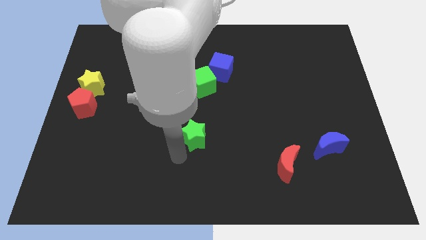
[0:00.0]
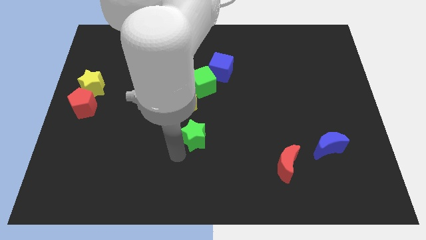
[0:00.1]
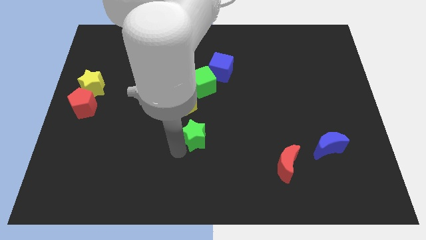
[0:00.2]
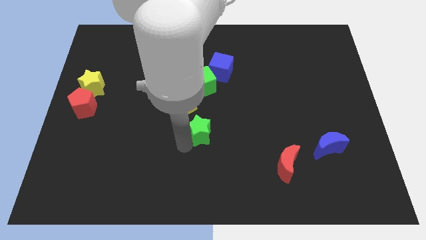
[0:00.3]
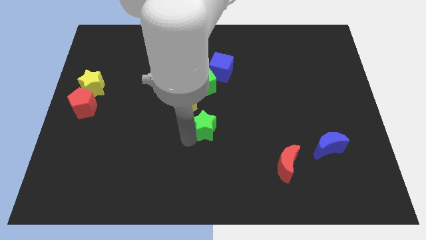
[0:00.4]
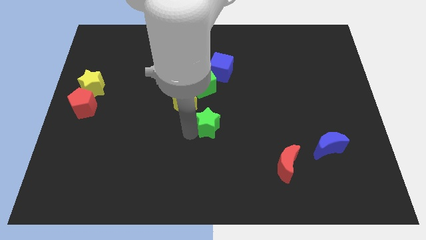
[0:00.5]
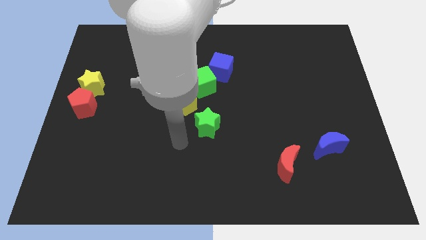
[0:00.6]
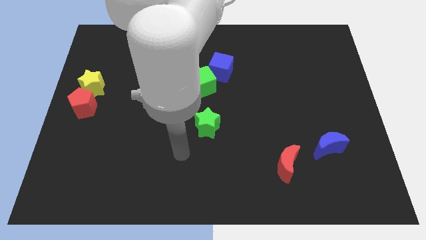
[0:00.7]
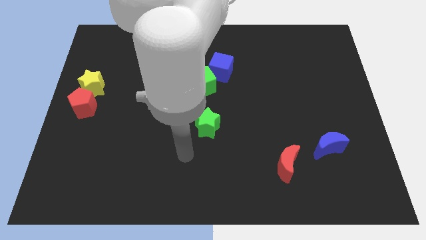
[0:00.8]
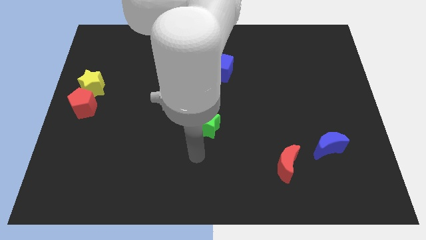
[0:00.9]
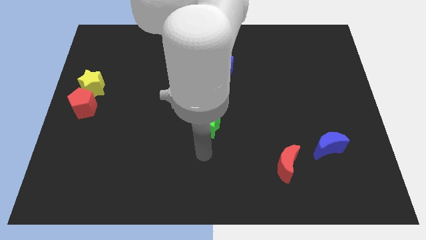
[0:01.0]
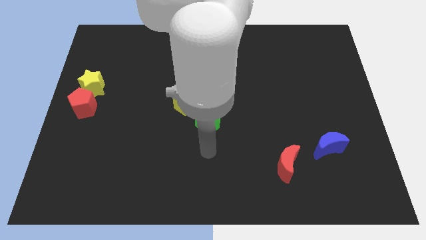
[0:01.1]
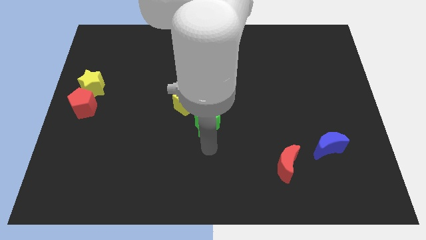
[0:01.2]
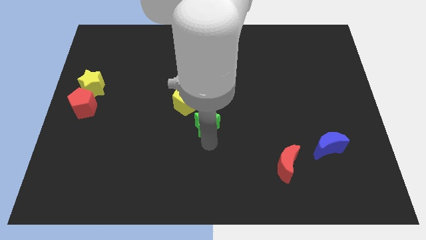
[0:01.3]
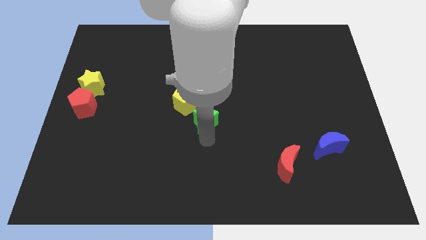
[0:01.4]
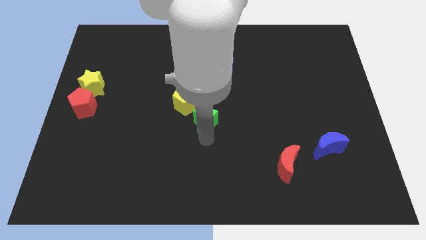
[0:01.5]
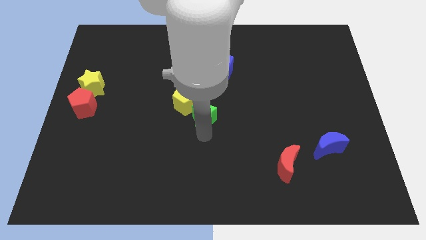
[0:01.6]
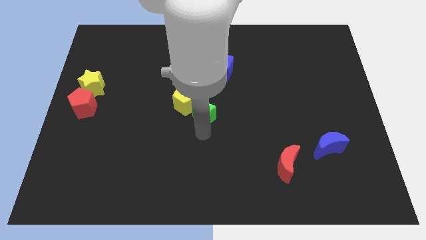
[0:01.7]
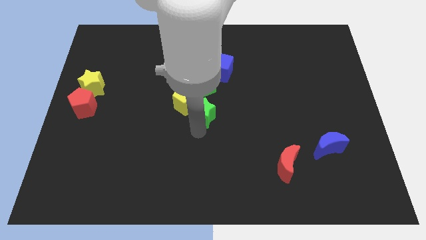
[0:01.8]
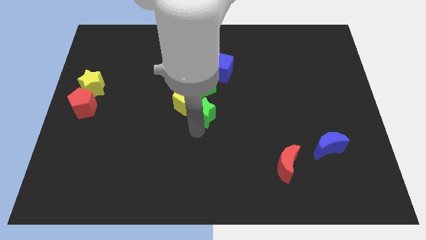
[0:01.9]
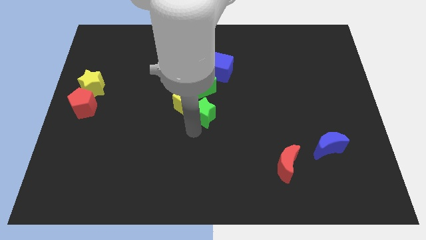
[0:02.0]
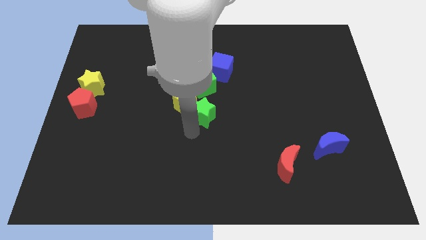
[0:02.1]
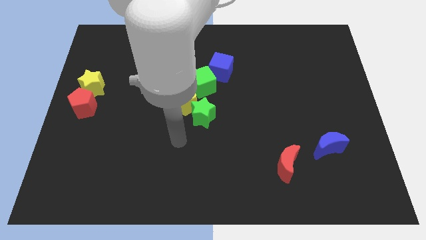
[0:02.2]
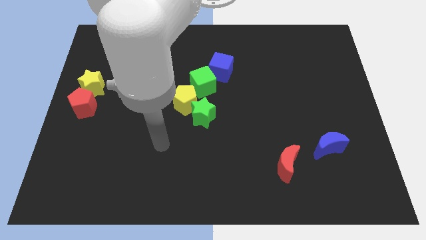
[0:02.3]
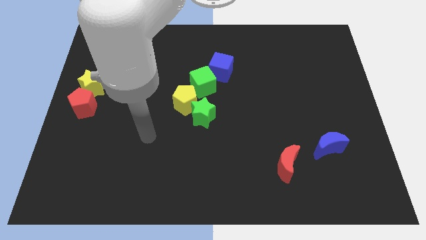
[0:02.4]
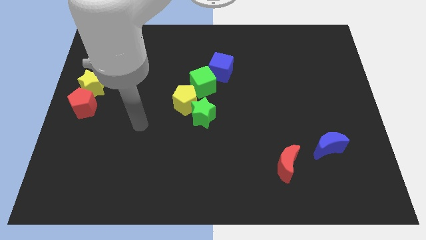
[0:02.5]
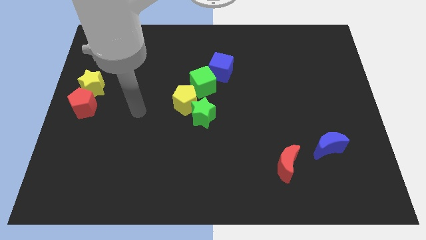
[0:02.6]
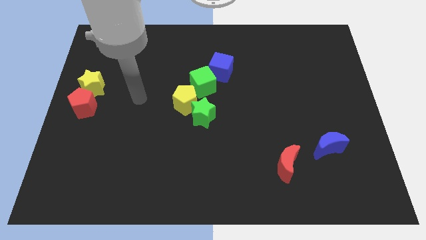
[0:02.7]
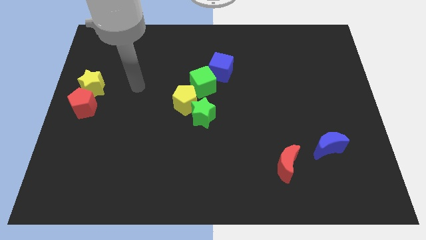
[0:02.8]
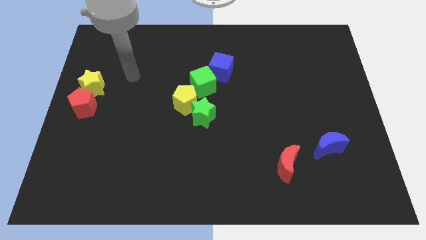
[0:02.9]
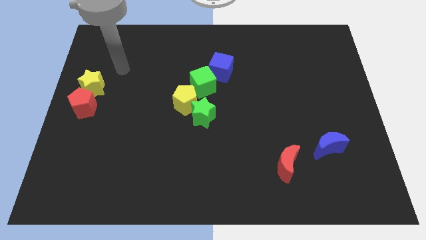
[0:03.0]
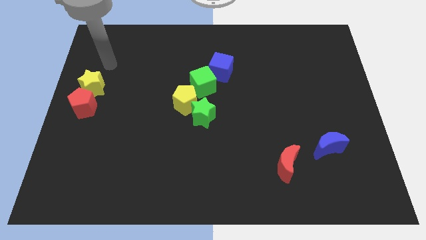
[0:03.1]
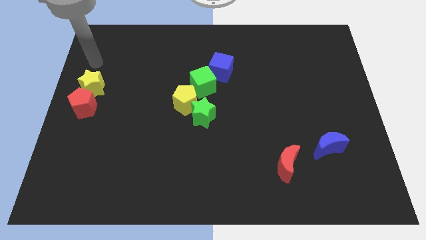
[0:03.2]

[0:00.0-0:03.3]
move green star at the bottom of yellow pentagon

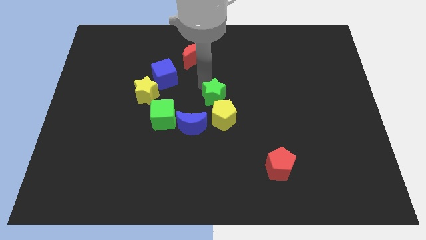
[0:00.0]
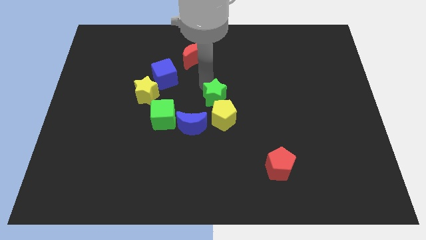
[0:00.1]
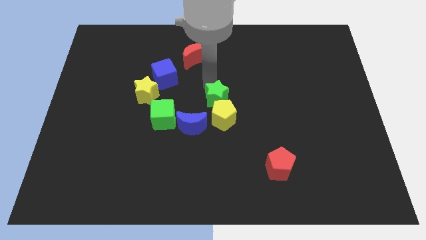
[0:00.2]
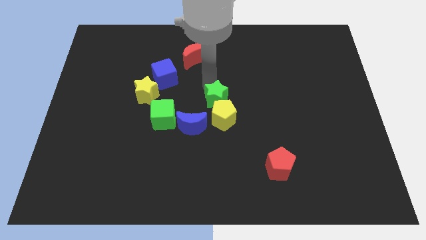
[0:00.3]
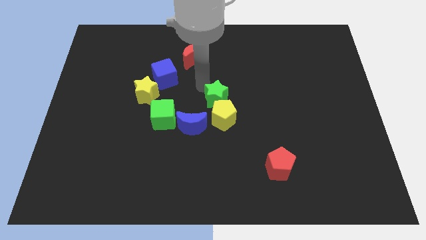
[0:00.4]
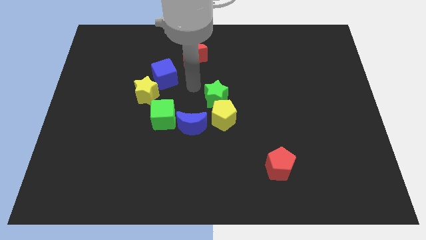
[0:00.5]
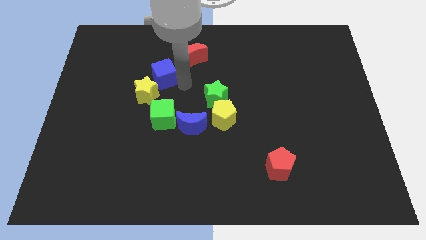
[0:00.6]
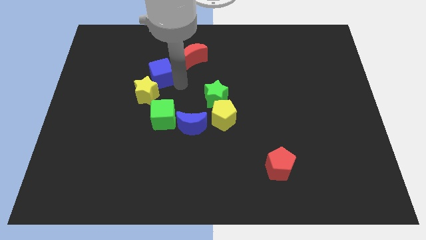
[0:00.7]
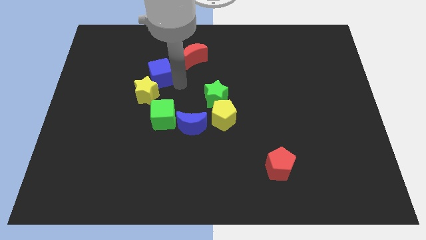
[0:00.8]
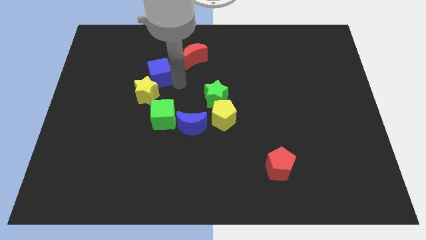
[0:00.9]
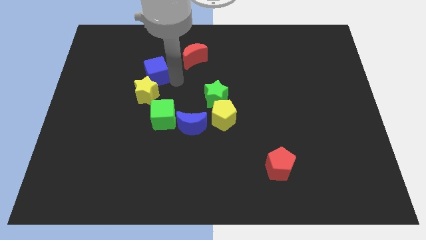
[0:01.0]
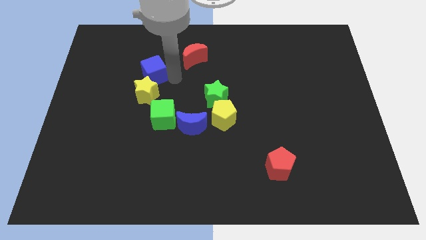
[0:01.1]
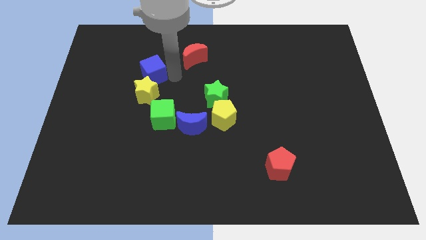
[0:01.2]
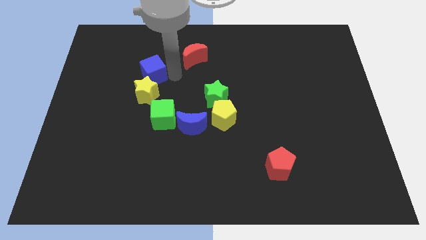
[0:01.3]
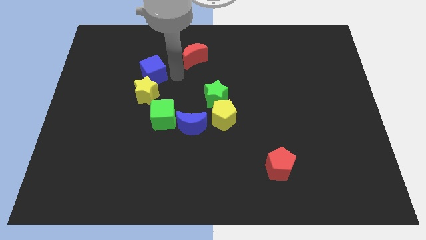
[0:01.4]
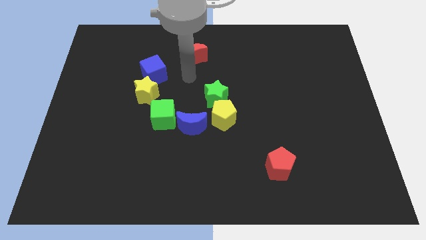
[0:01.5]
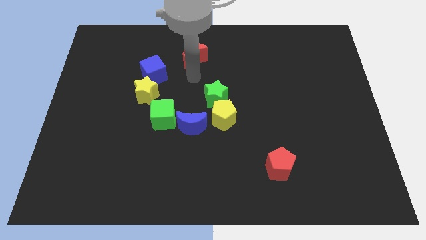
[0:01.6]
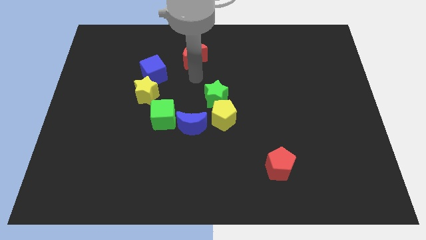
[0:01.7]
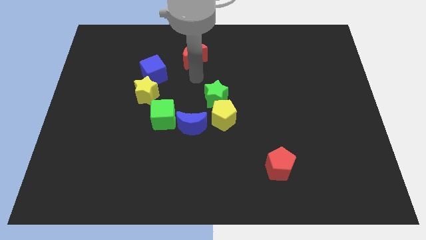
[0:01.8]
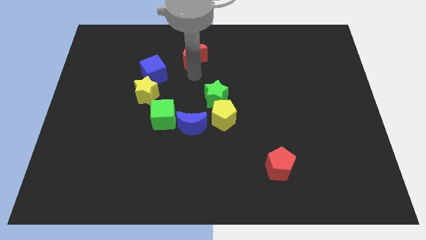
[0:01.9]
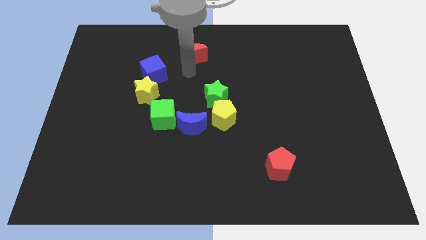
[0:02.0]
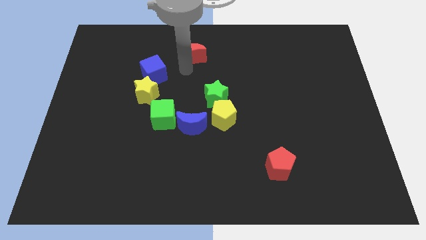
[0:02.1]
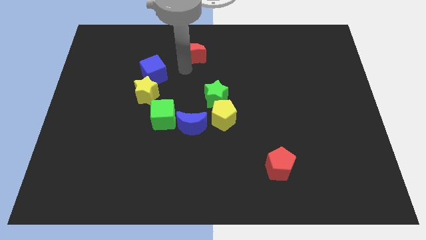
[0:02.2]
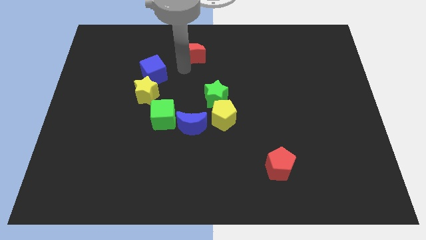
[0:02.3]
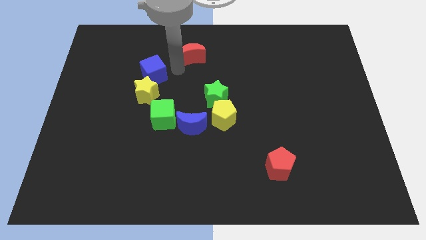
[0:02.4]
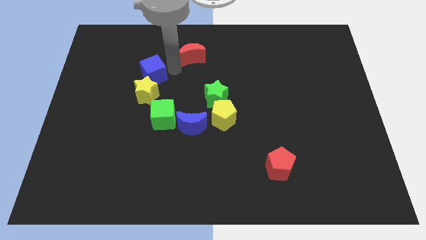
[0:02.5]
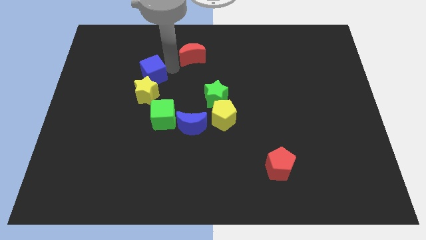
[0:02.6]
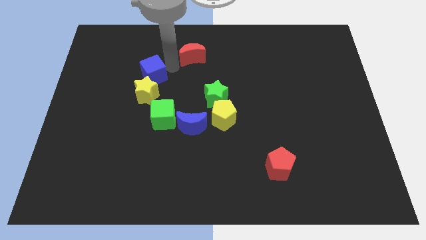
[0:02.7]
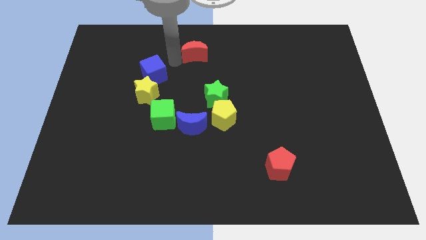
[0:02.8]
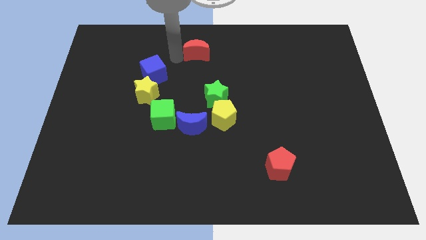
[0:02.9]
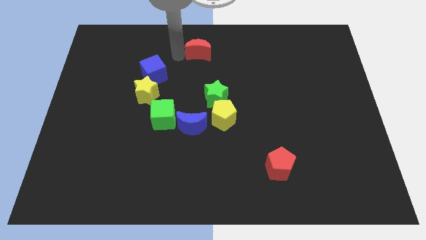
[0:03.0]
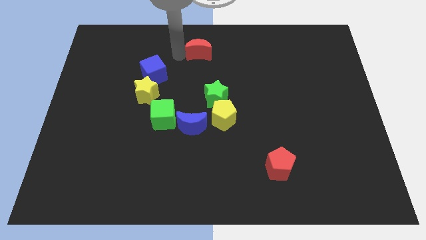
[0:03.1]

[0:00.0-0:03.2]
move the red crescent slightly to the center

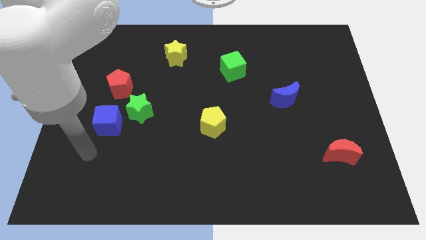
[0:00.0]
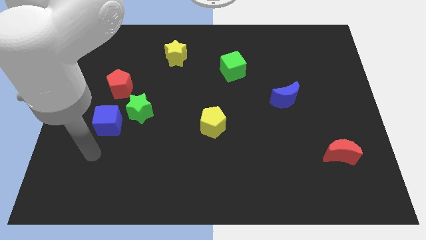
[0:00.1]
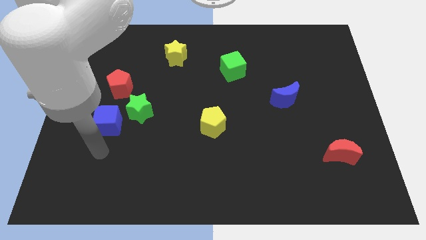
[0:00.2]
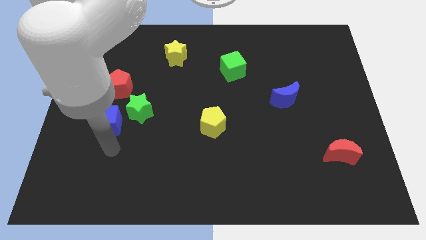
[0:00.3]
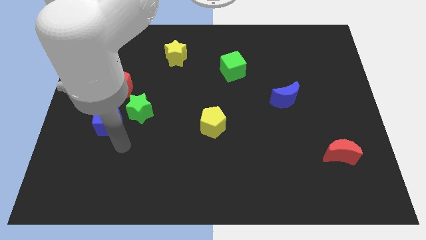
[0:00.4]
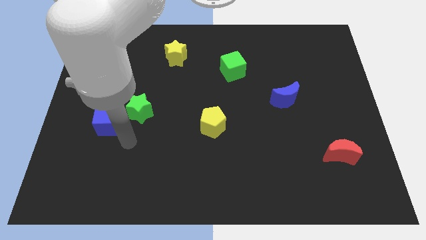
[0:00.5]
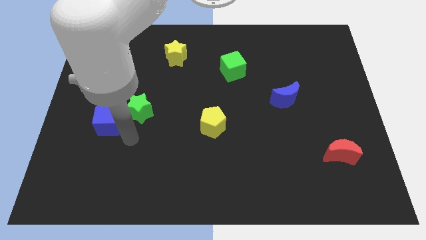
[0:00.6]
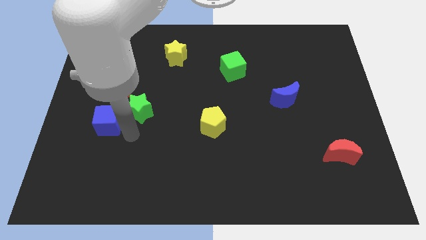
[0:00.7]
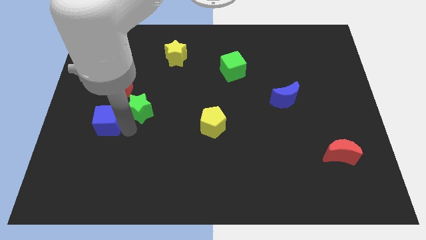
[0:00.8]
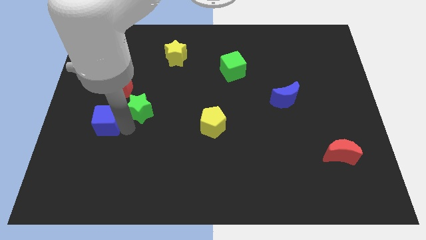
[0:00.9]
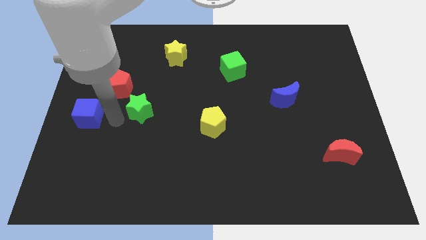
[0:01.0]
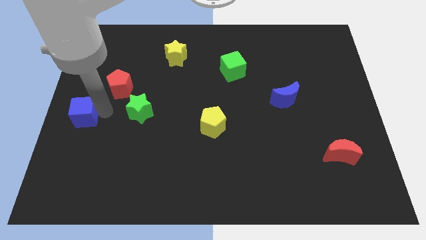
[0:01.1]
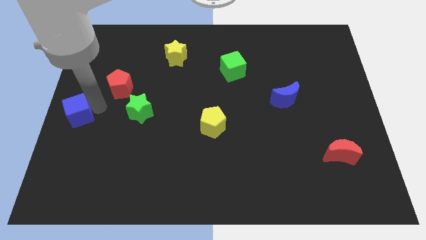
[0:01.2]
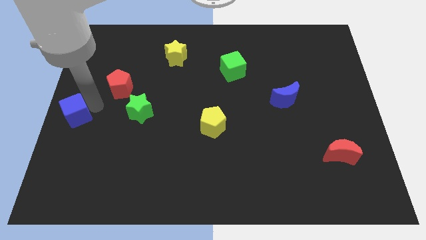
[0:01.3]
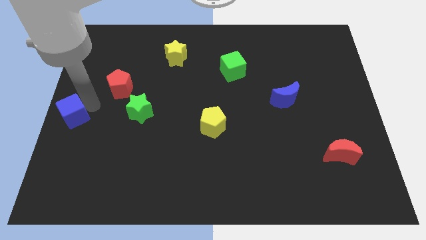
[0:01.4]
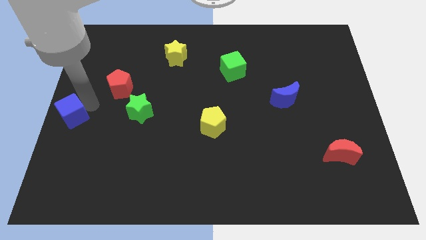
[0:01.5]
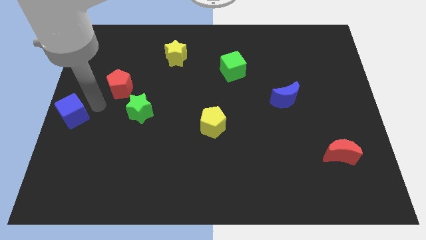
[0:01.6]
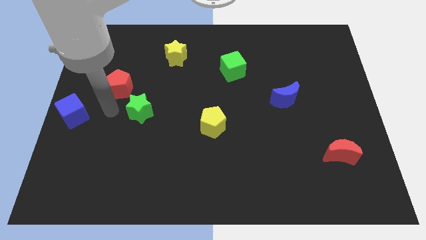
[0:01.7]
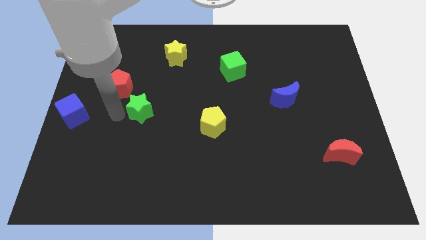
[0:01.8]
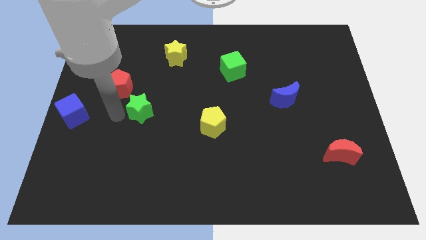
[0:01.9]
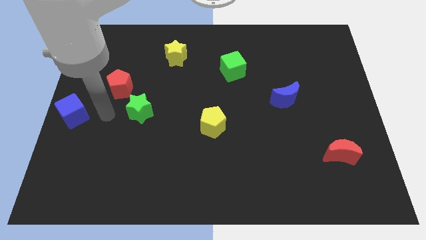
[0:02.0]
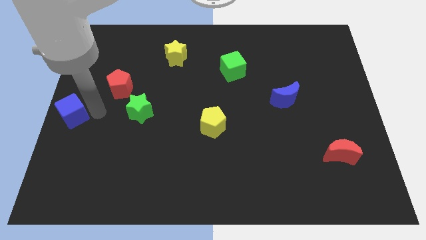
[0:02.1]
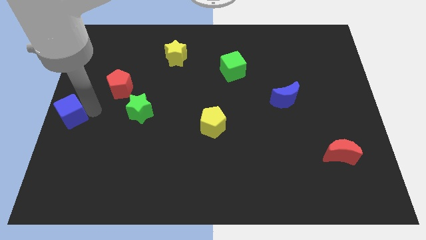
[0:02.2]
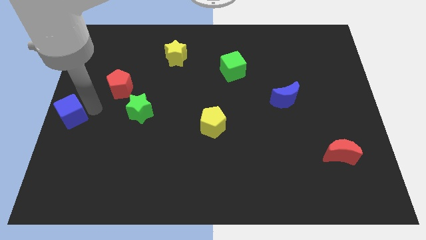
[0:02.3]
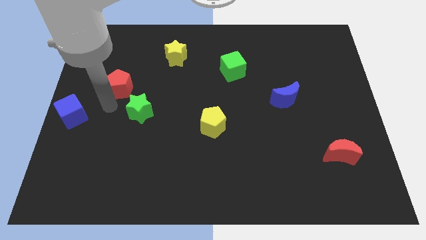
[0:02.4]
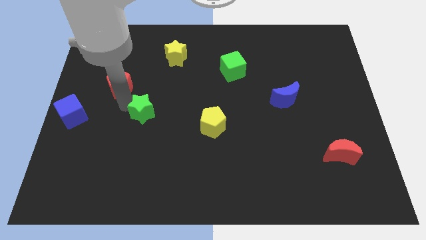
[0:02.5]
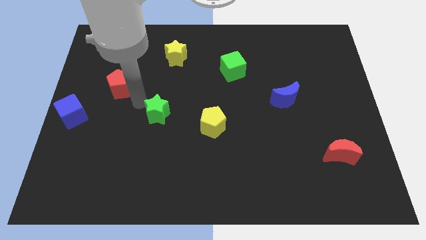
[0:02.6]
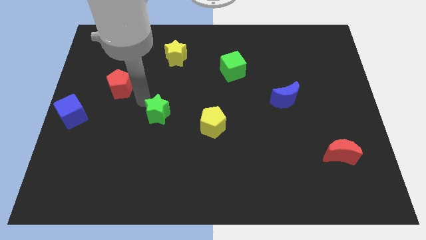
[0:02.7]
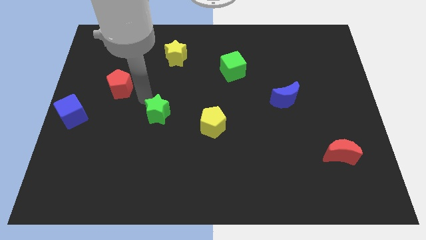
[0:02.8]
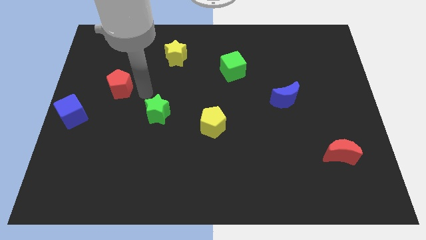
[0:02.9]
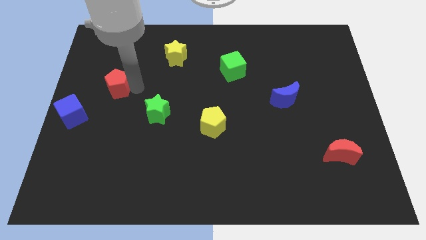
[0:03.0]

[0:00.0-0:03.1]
push the blue cube and green star horizontal to each other
